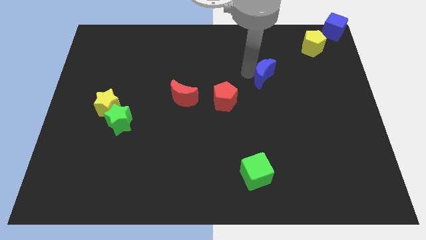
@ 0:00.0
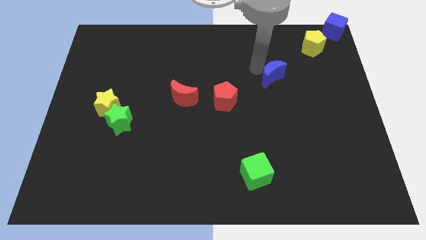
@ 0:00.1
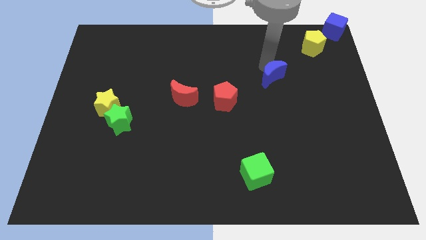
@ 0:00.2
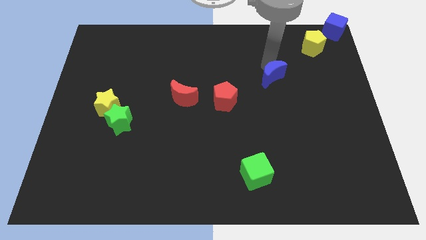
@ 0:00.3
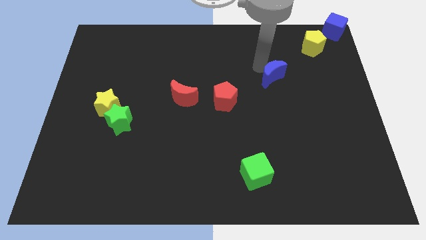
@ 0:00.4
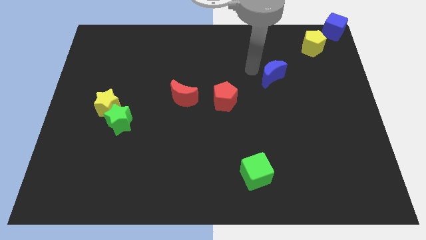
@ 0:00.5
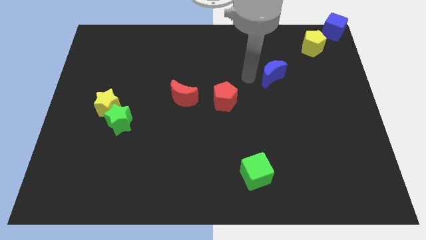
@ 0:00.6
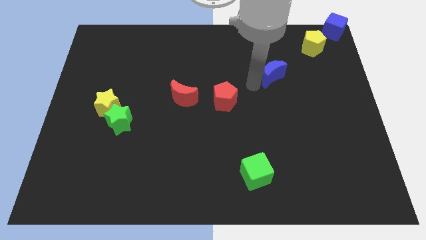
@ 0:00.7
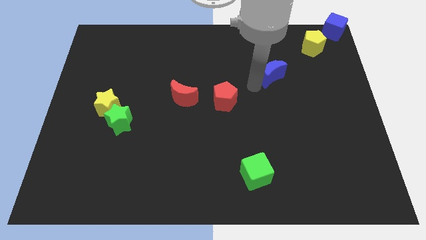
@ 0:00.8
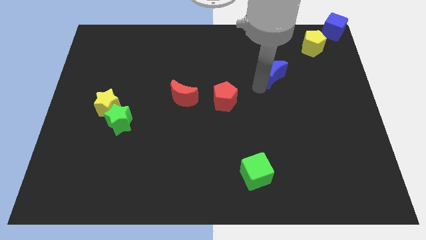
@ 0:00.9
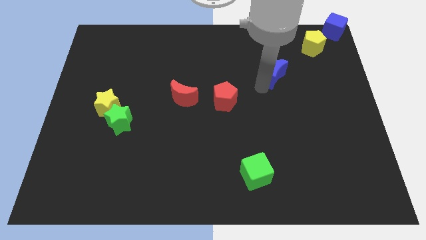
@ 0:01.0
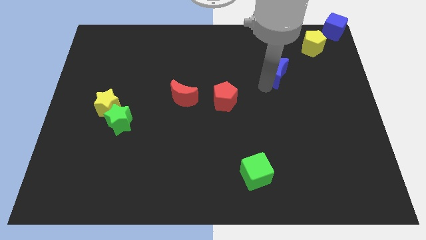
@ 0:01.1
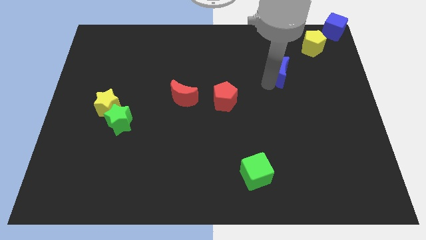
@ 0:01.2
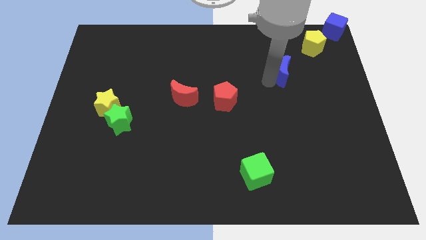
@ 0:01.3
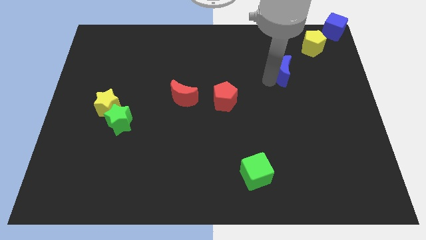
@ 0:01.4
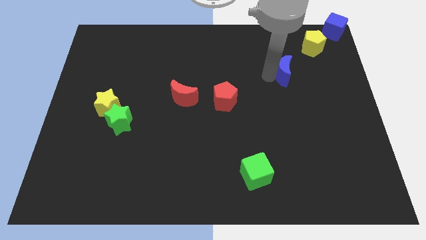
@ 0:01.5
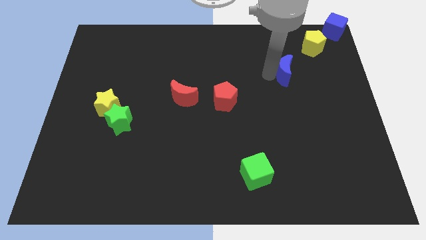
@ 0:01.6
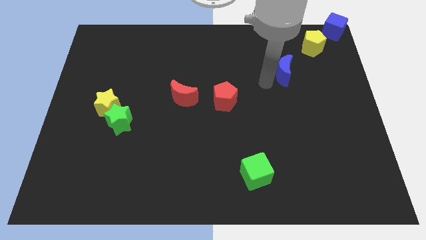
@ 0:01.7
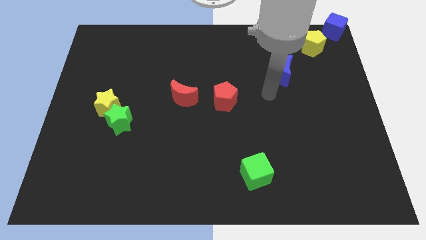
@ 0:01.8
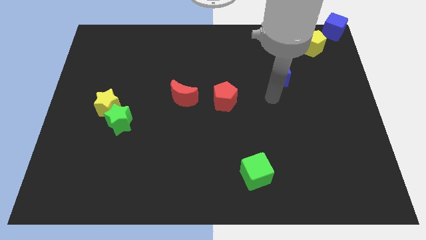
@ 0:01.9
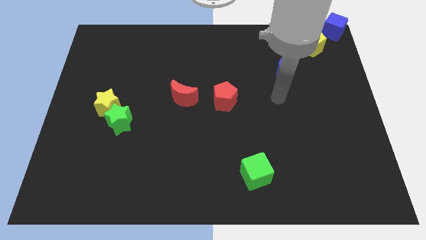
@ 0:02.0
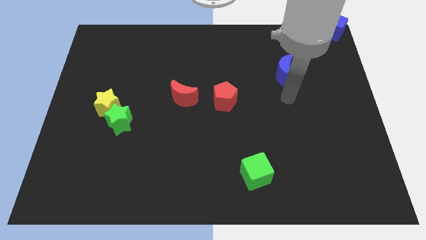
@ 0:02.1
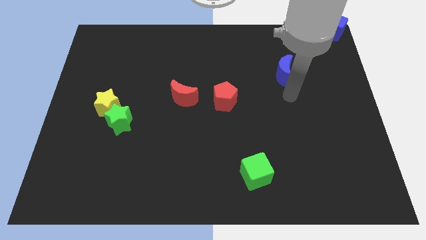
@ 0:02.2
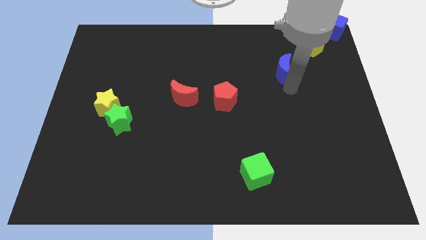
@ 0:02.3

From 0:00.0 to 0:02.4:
place the blue moon diagonally to yellow pentagon

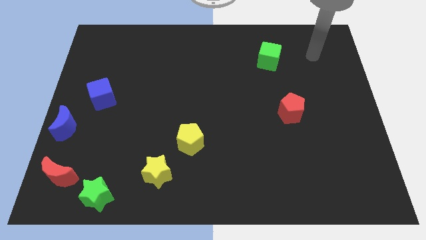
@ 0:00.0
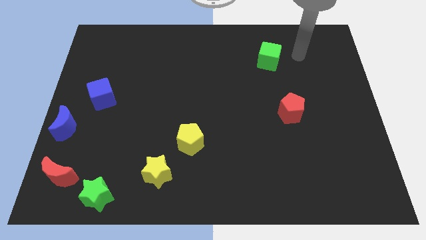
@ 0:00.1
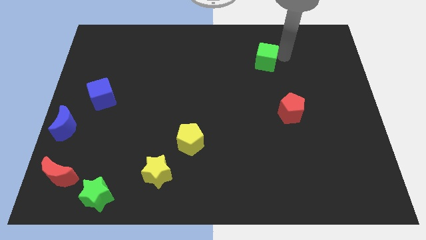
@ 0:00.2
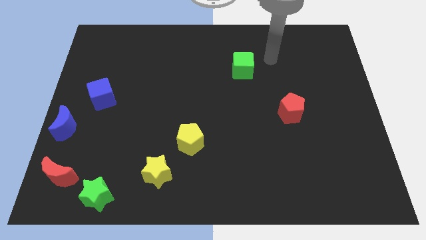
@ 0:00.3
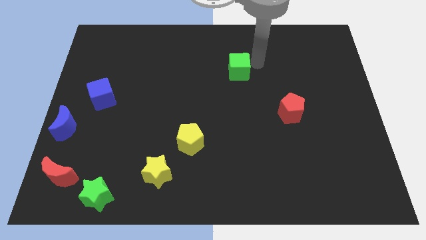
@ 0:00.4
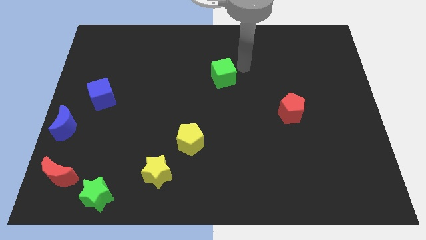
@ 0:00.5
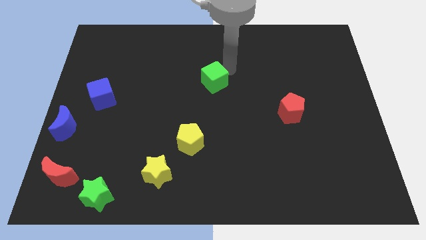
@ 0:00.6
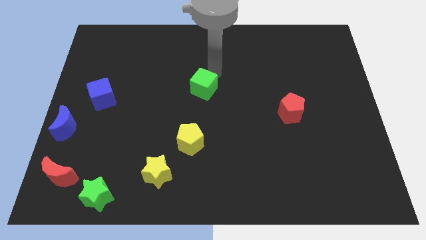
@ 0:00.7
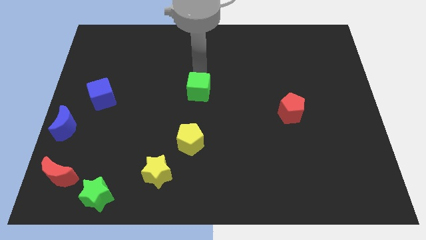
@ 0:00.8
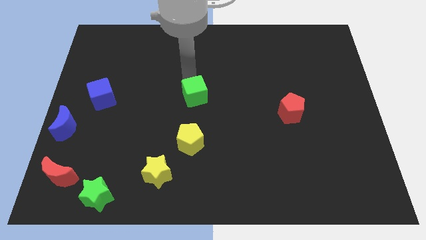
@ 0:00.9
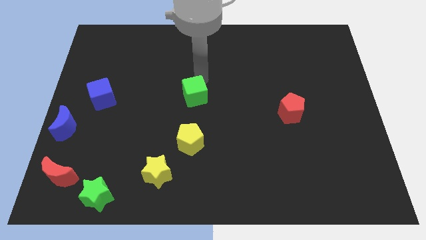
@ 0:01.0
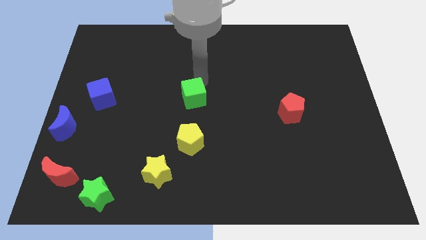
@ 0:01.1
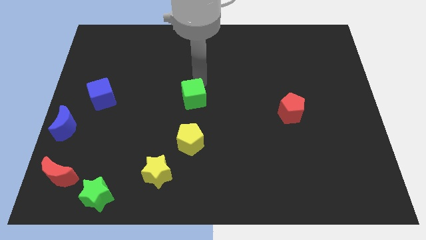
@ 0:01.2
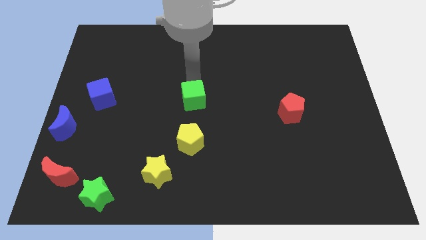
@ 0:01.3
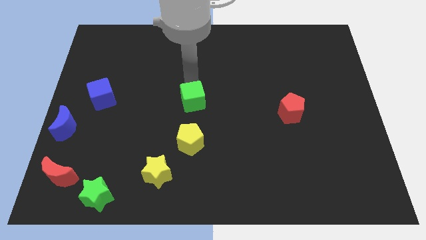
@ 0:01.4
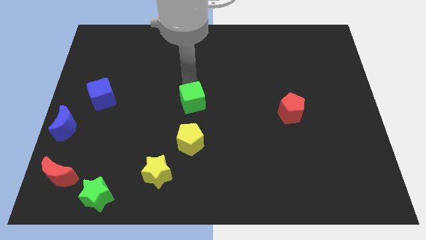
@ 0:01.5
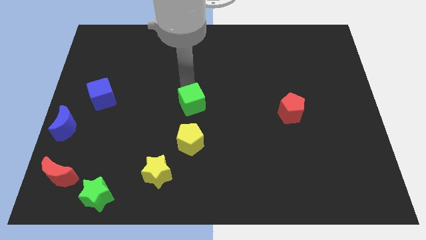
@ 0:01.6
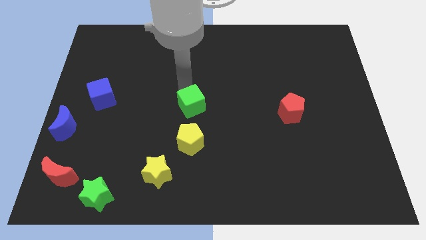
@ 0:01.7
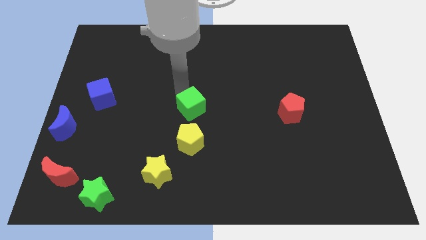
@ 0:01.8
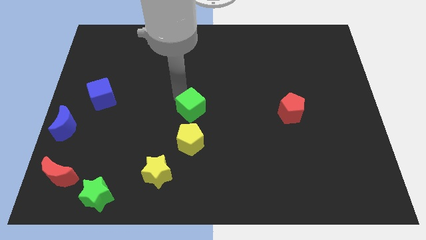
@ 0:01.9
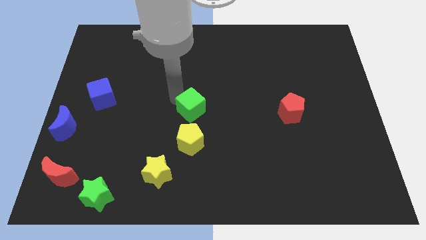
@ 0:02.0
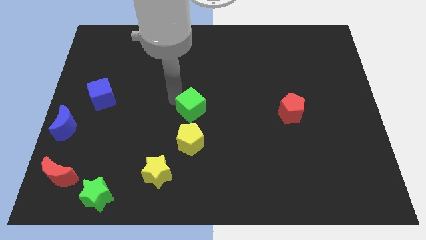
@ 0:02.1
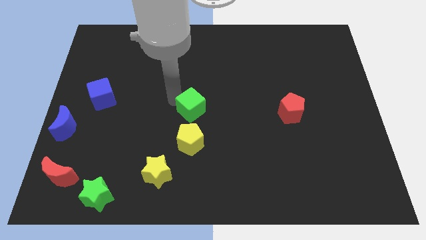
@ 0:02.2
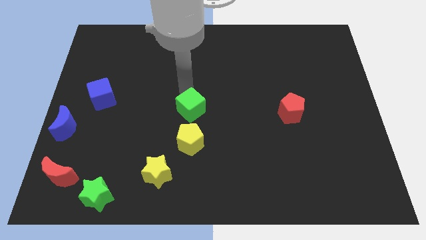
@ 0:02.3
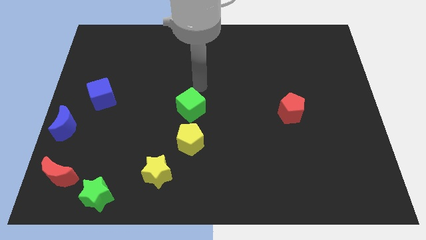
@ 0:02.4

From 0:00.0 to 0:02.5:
push the green cube to the top of the yellow pentagon

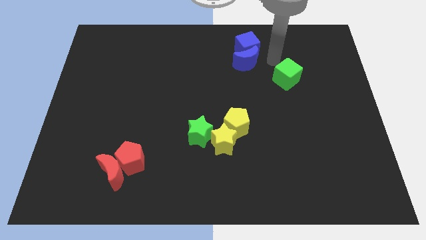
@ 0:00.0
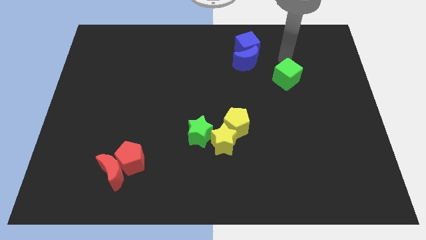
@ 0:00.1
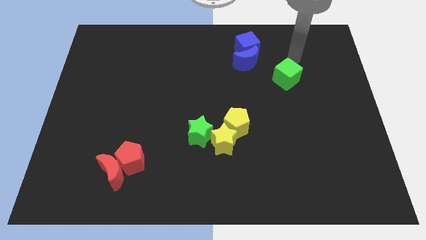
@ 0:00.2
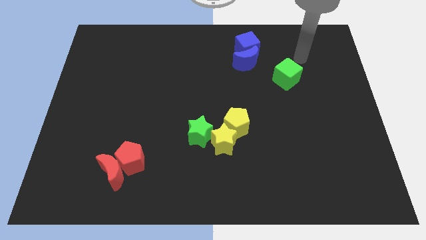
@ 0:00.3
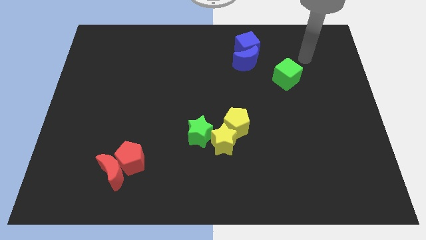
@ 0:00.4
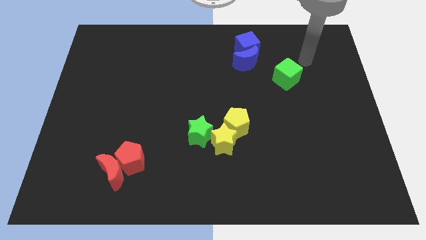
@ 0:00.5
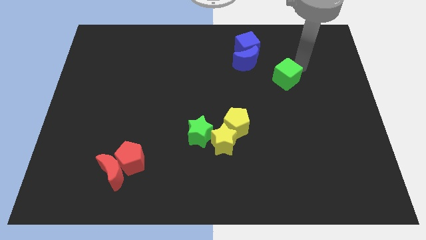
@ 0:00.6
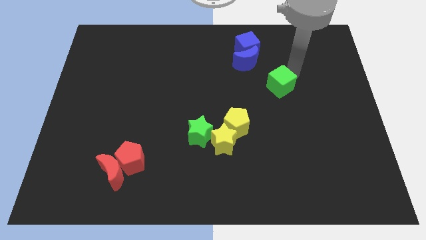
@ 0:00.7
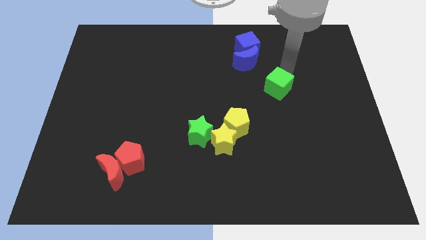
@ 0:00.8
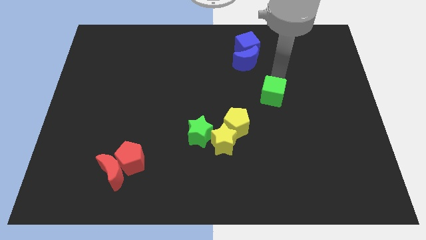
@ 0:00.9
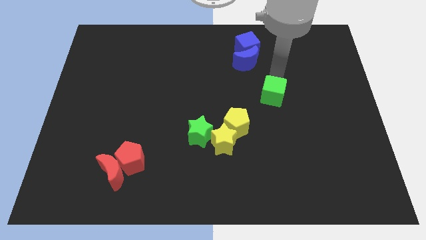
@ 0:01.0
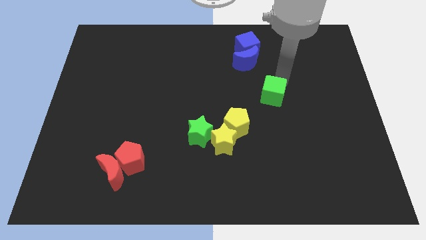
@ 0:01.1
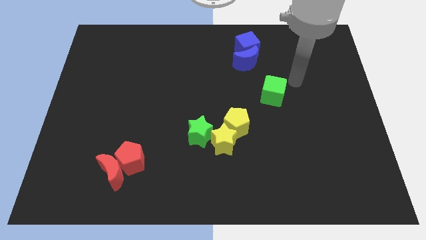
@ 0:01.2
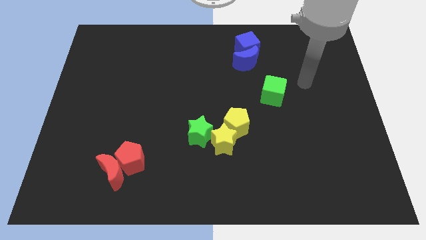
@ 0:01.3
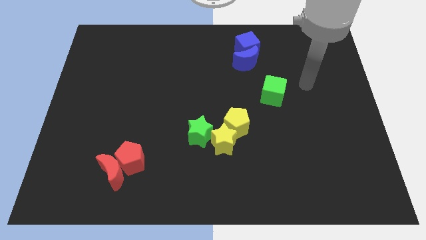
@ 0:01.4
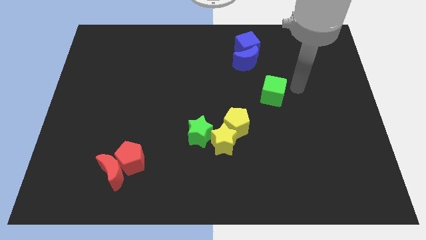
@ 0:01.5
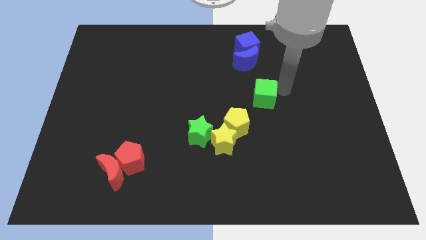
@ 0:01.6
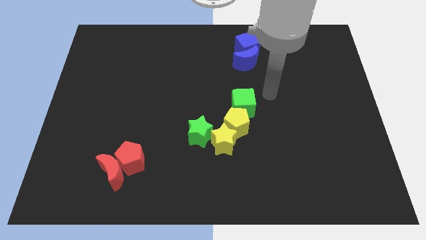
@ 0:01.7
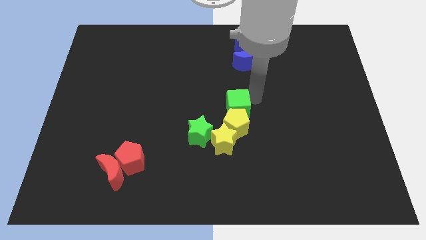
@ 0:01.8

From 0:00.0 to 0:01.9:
place the green cube on top of the yellow pentagon

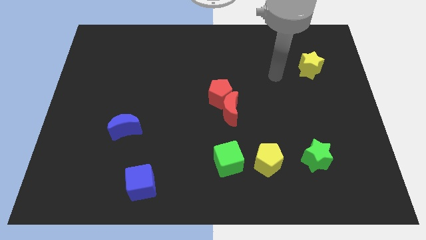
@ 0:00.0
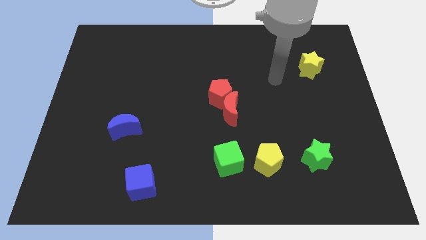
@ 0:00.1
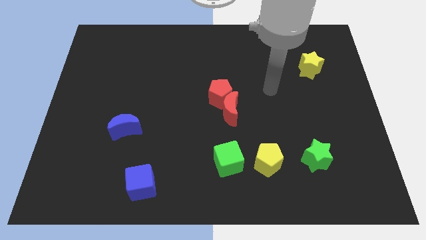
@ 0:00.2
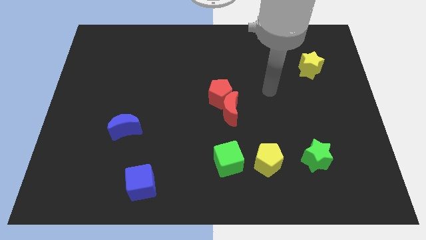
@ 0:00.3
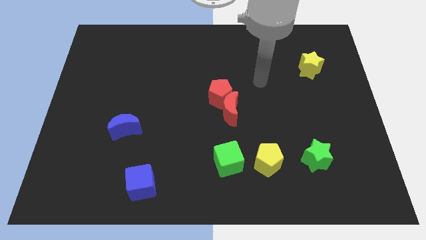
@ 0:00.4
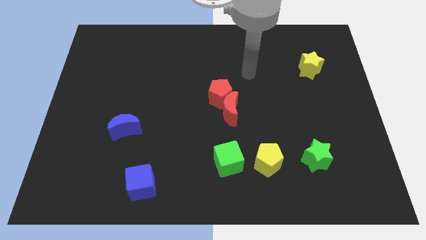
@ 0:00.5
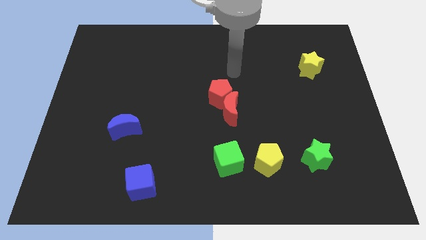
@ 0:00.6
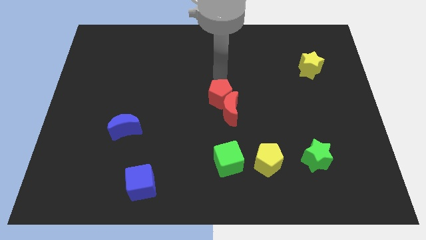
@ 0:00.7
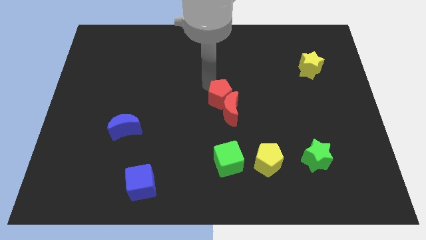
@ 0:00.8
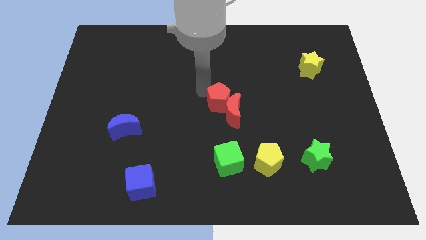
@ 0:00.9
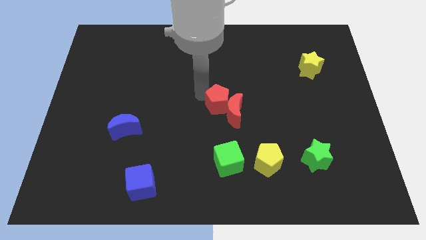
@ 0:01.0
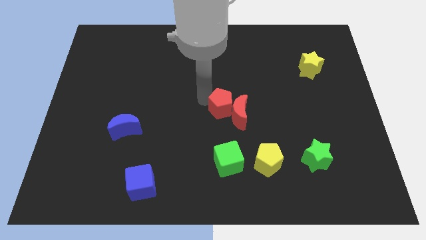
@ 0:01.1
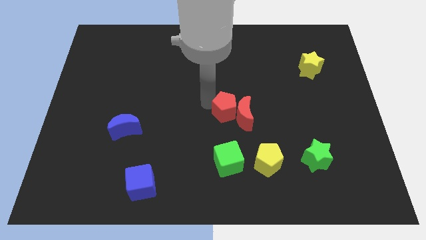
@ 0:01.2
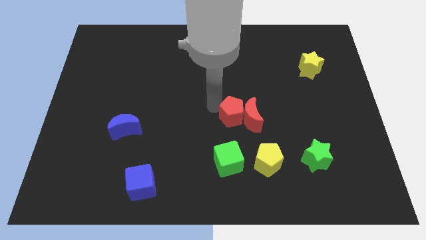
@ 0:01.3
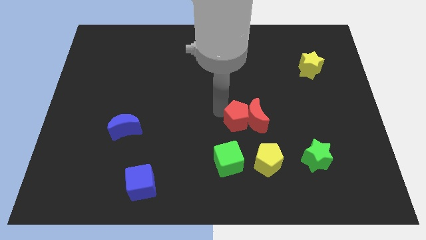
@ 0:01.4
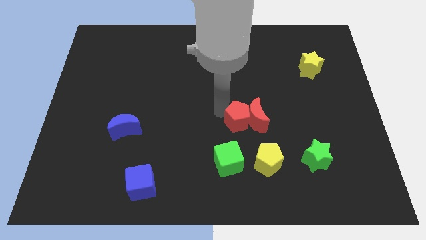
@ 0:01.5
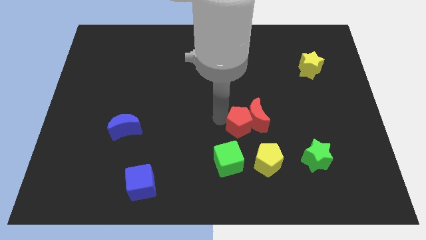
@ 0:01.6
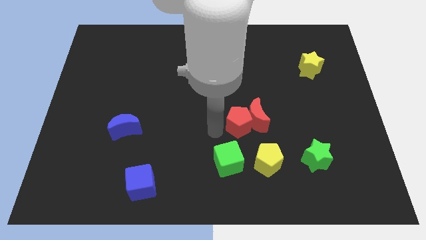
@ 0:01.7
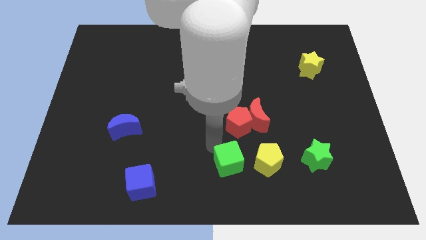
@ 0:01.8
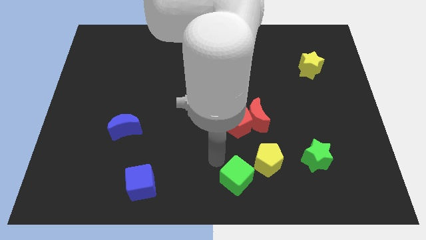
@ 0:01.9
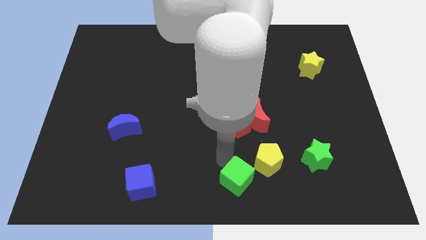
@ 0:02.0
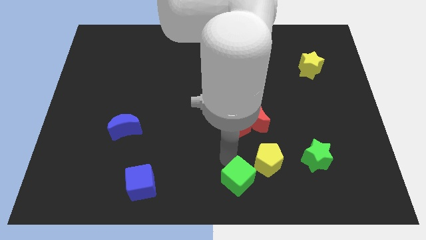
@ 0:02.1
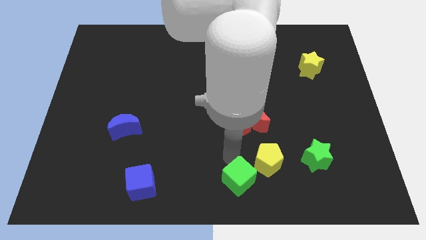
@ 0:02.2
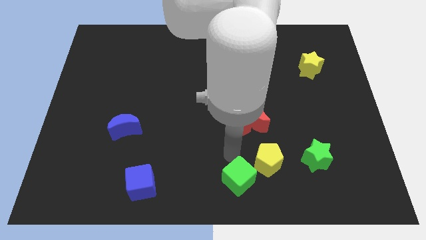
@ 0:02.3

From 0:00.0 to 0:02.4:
move the red blocks center right of the board
